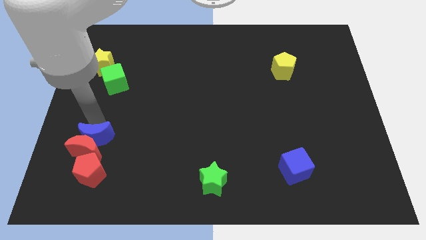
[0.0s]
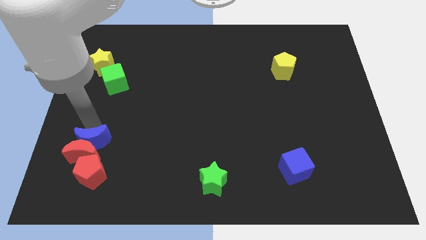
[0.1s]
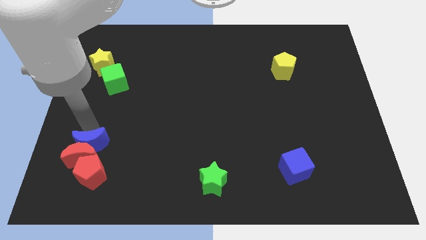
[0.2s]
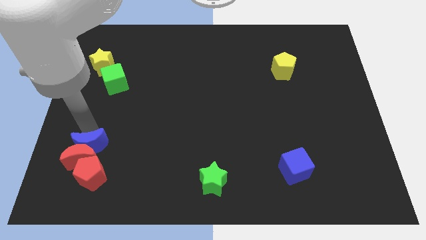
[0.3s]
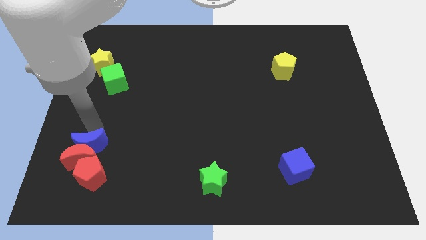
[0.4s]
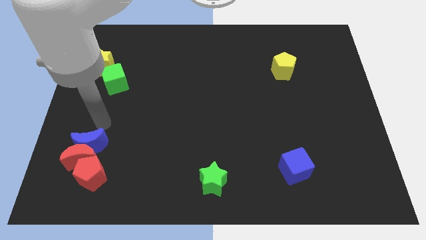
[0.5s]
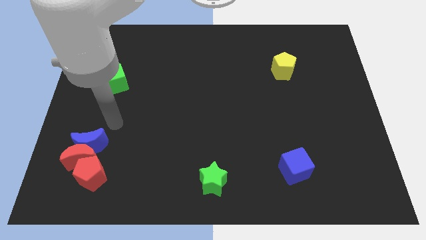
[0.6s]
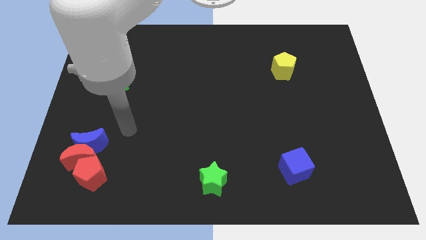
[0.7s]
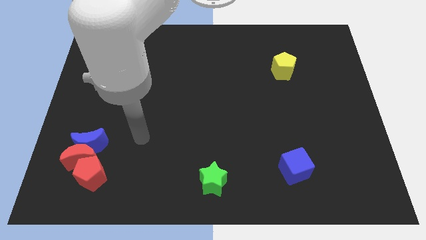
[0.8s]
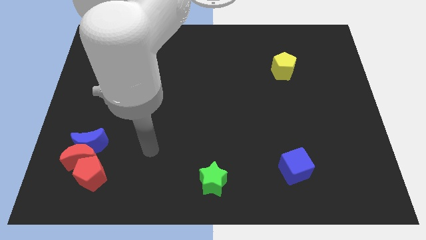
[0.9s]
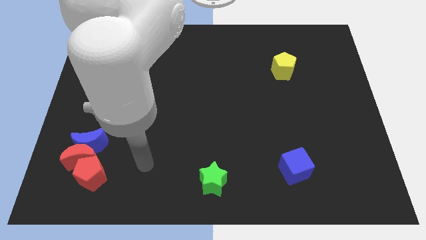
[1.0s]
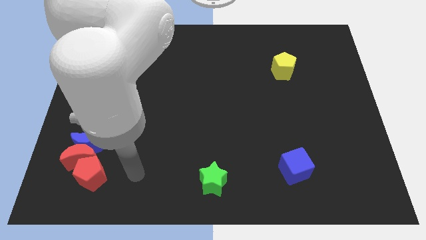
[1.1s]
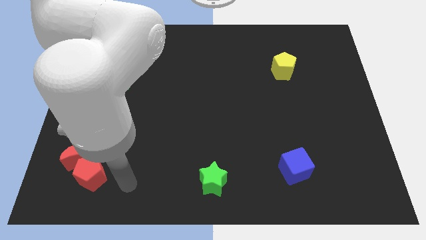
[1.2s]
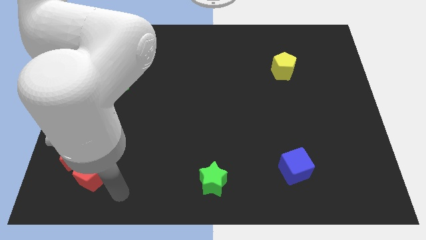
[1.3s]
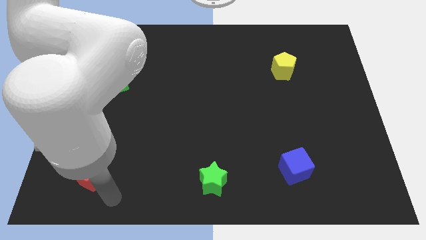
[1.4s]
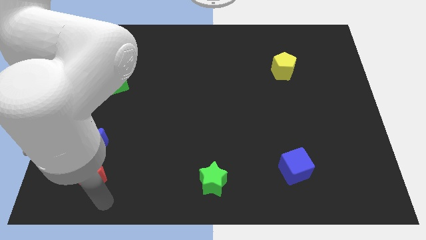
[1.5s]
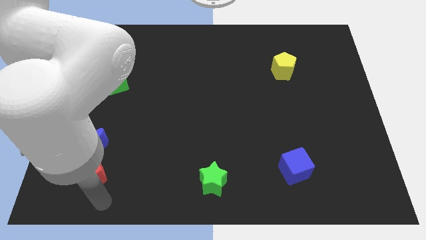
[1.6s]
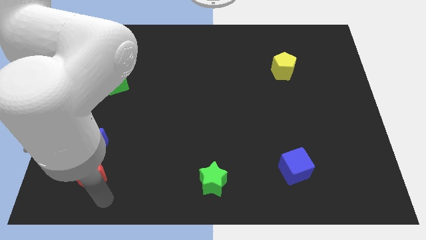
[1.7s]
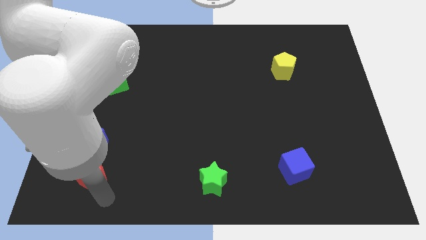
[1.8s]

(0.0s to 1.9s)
move the arm towards the bottom of the red pentagon

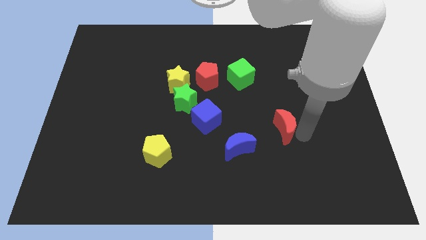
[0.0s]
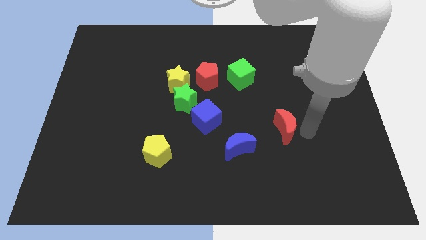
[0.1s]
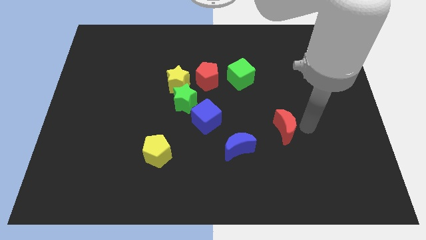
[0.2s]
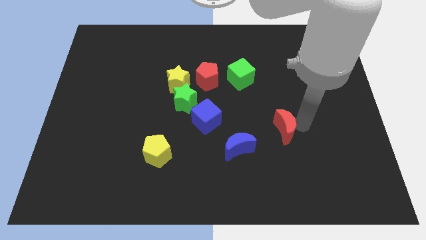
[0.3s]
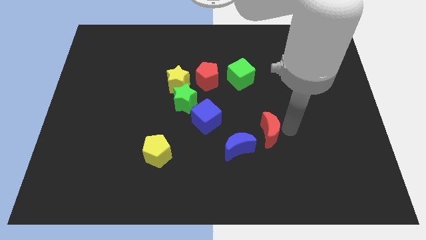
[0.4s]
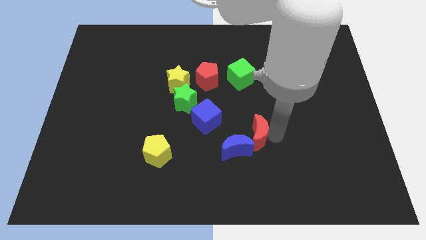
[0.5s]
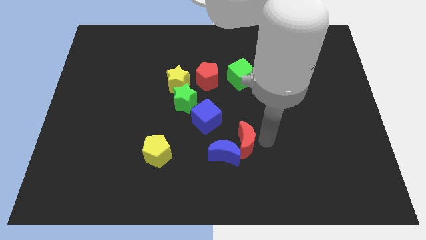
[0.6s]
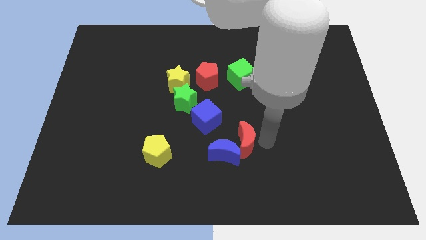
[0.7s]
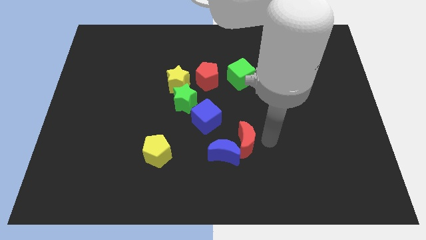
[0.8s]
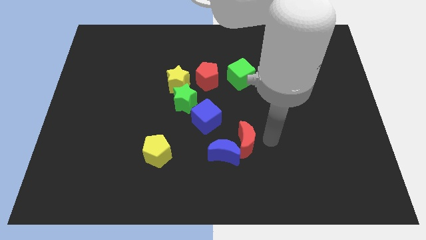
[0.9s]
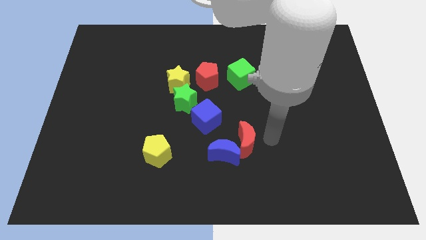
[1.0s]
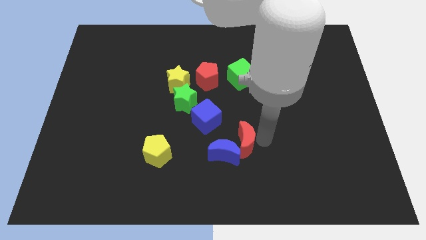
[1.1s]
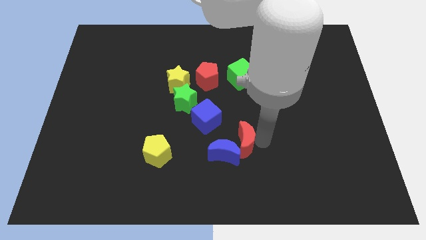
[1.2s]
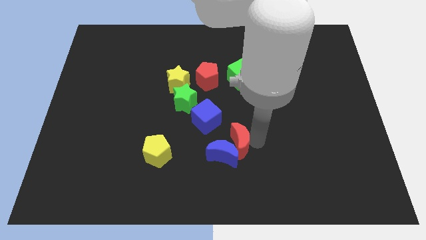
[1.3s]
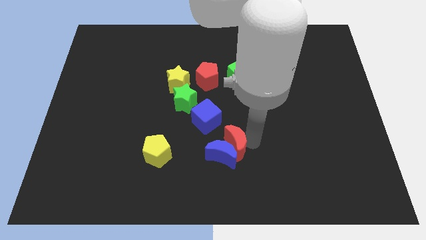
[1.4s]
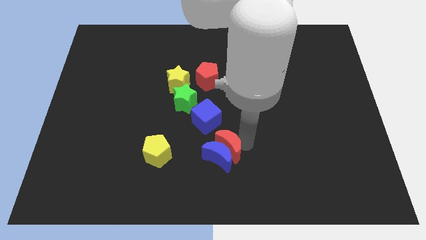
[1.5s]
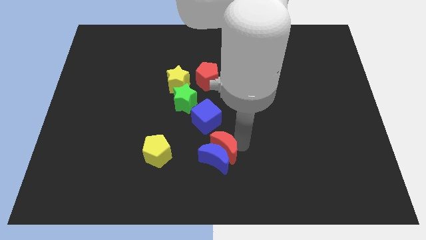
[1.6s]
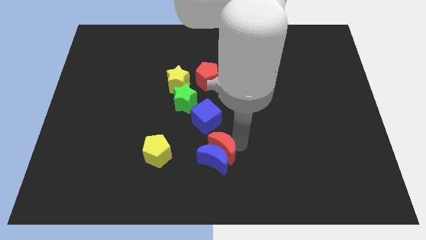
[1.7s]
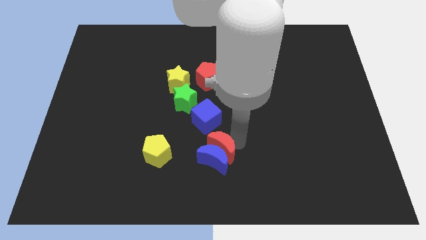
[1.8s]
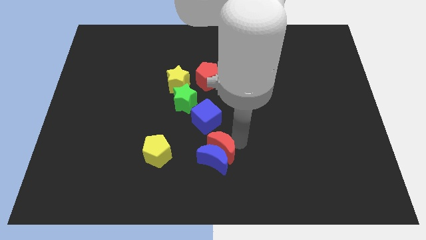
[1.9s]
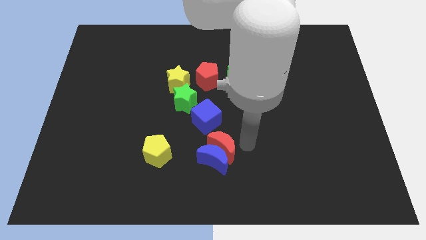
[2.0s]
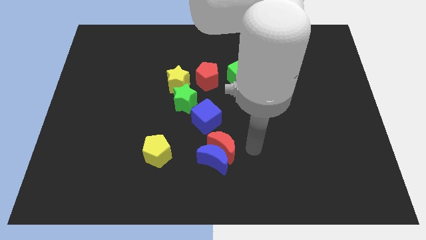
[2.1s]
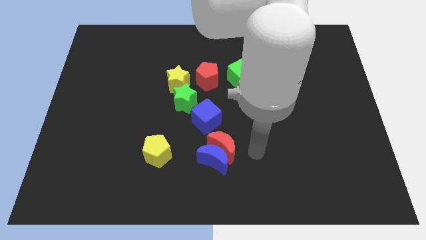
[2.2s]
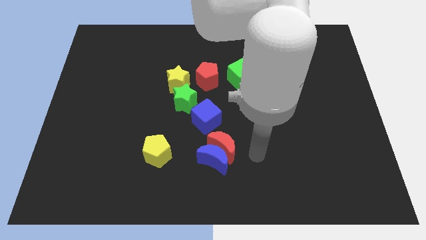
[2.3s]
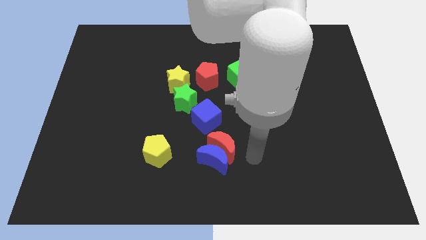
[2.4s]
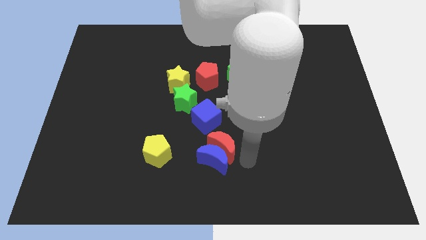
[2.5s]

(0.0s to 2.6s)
move the red moon into the blue moon

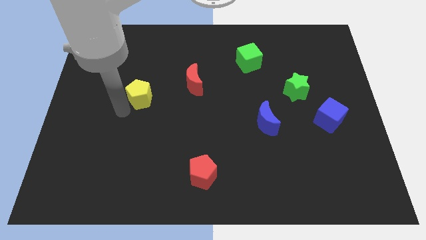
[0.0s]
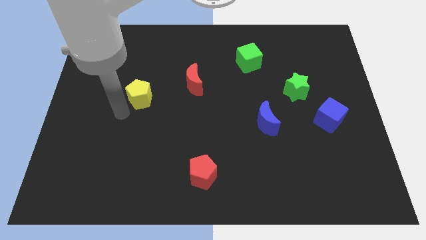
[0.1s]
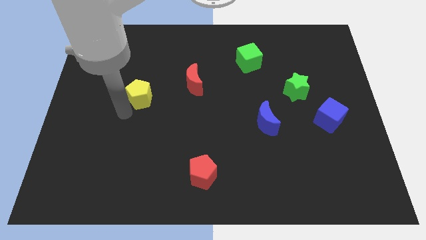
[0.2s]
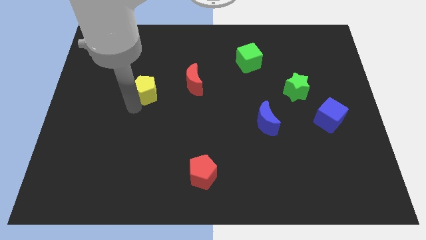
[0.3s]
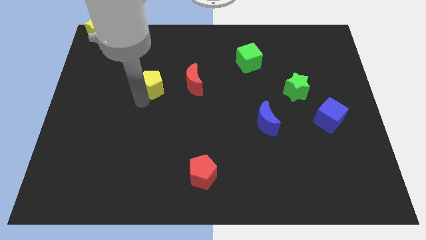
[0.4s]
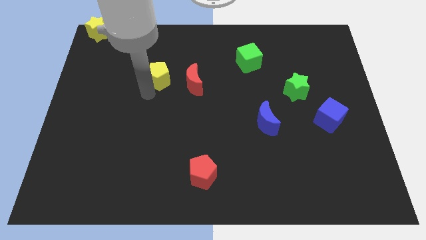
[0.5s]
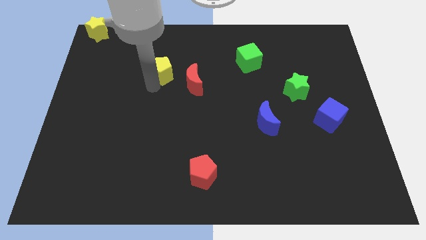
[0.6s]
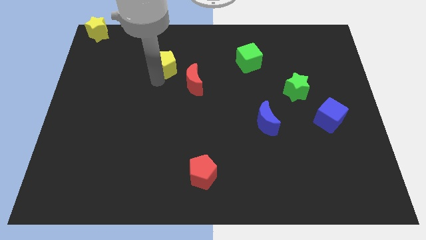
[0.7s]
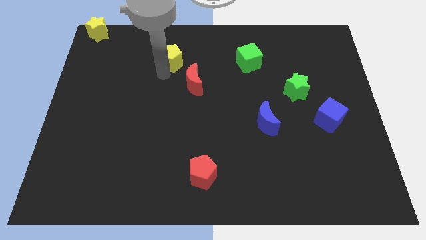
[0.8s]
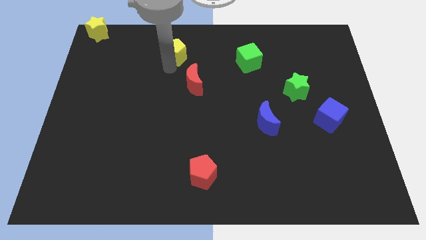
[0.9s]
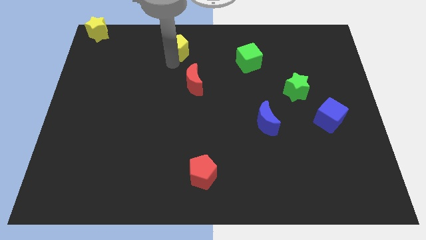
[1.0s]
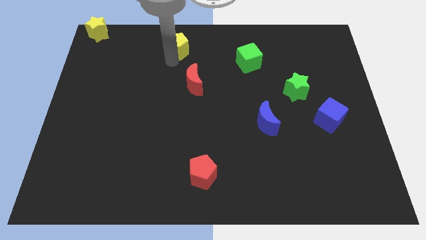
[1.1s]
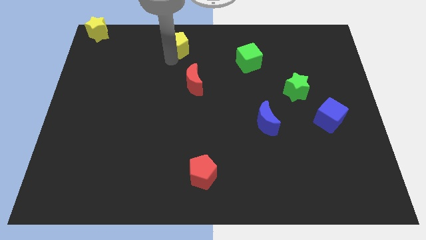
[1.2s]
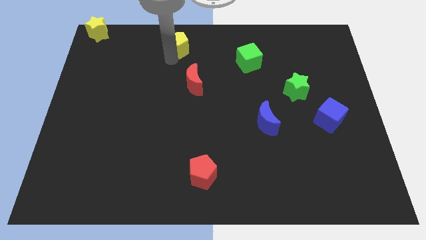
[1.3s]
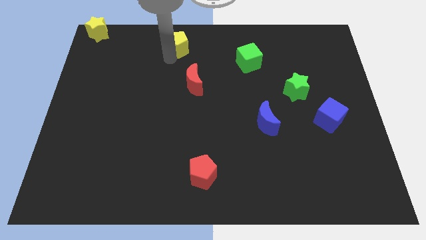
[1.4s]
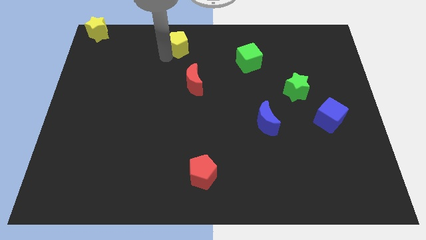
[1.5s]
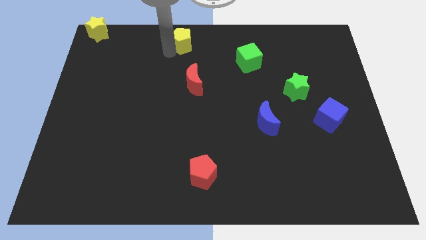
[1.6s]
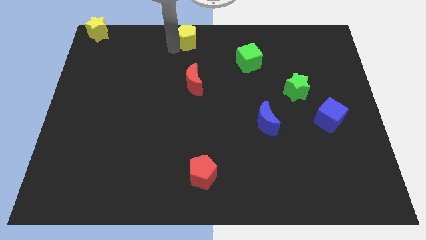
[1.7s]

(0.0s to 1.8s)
move yellow pentagon to the top of the board

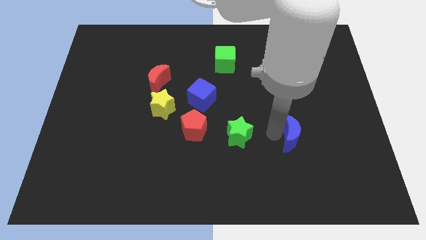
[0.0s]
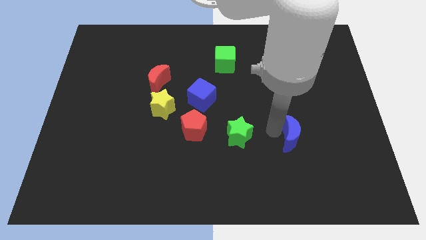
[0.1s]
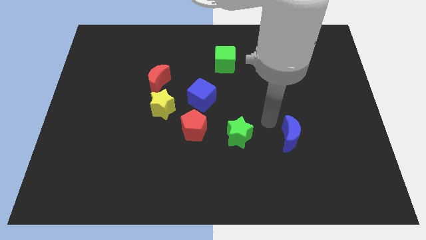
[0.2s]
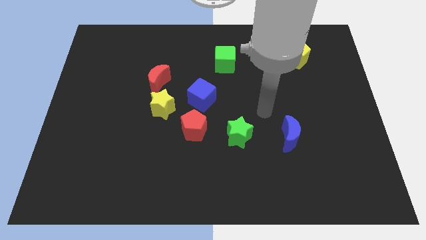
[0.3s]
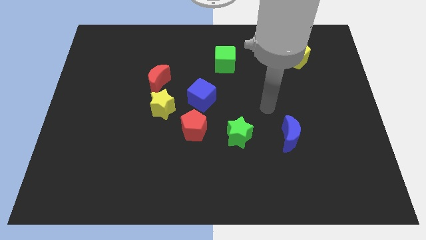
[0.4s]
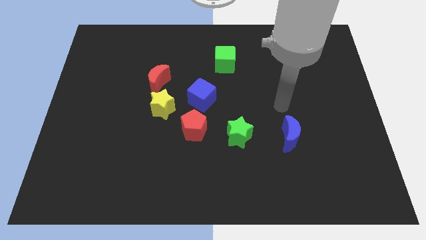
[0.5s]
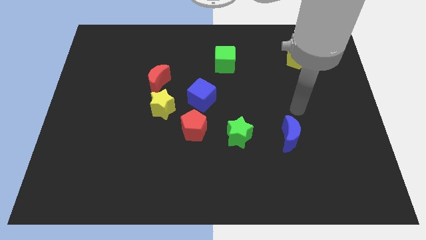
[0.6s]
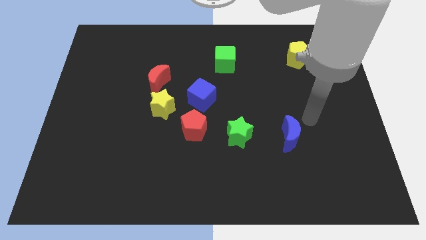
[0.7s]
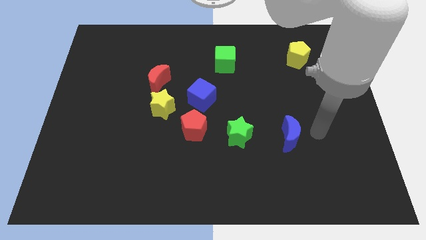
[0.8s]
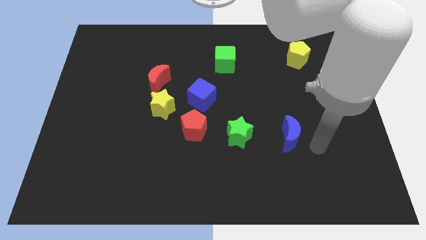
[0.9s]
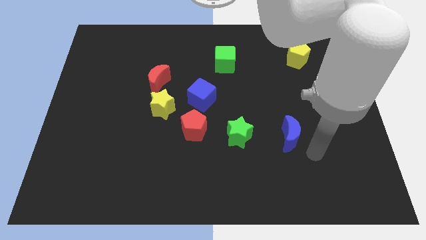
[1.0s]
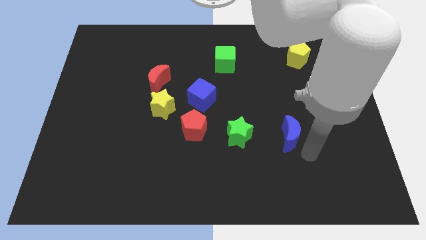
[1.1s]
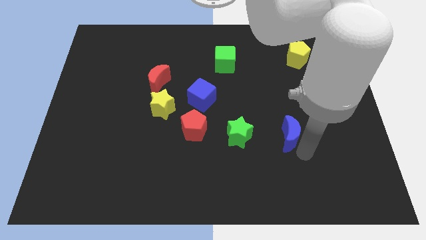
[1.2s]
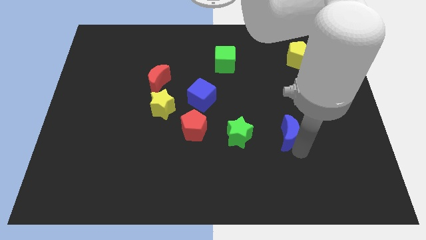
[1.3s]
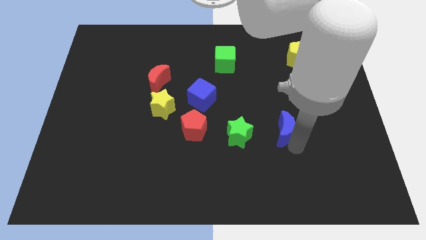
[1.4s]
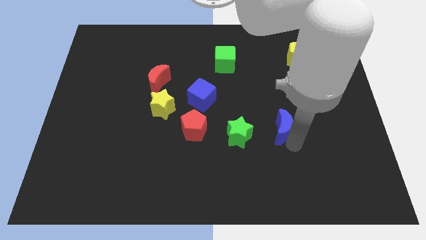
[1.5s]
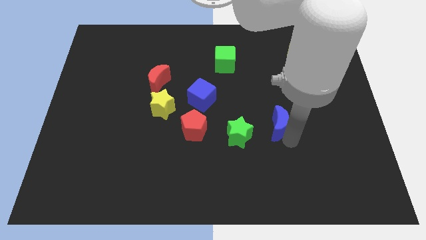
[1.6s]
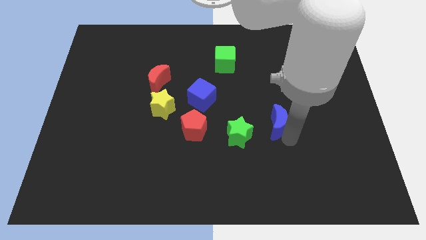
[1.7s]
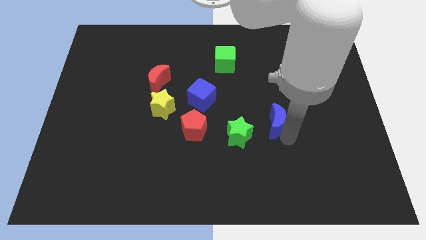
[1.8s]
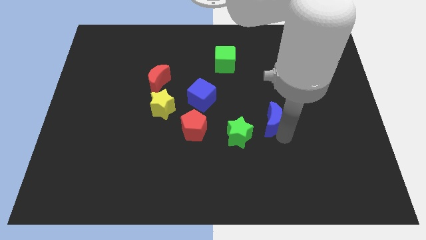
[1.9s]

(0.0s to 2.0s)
slide the blue crescent slightly towards the cube

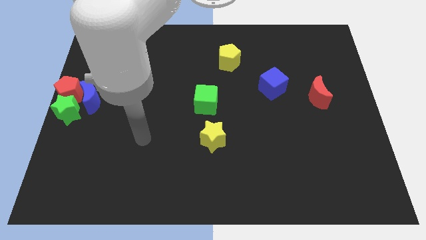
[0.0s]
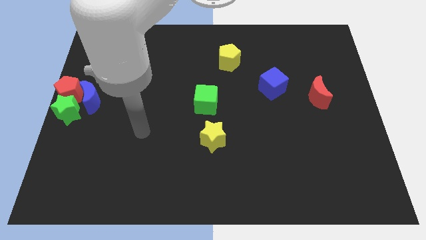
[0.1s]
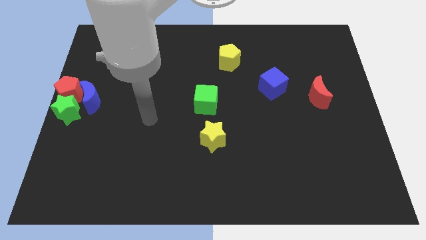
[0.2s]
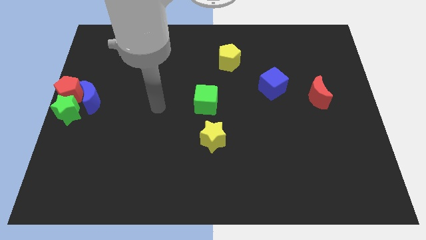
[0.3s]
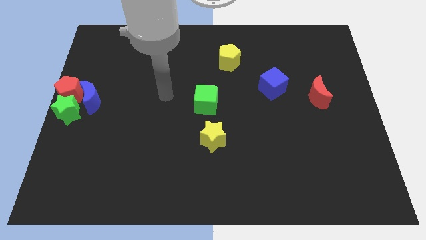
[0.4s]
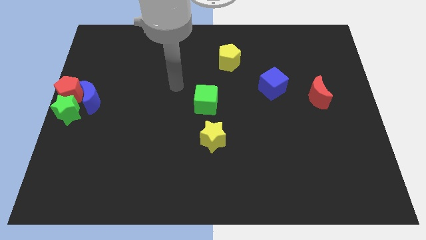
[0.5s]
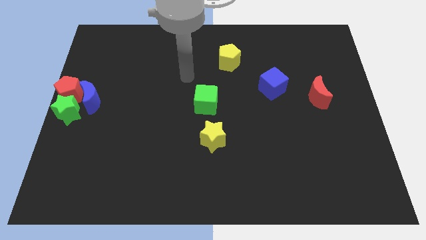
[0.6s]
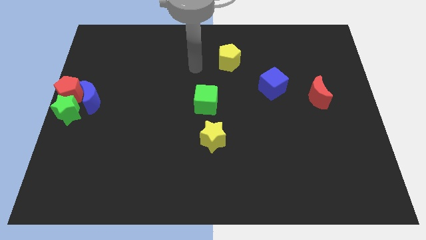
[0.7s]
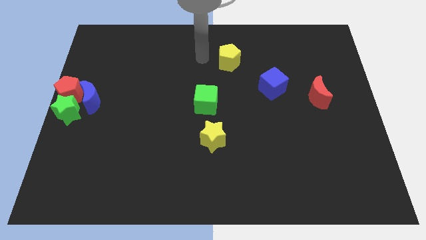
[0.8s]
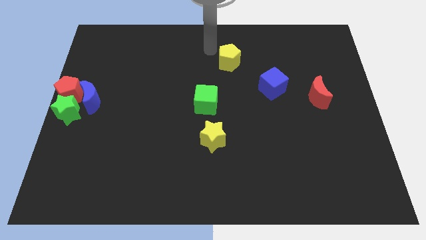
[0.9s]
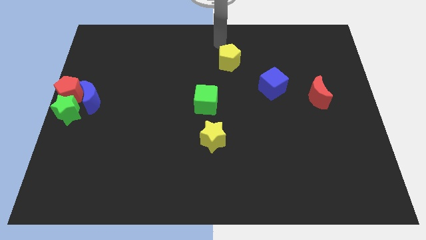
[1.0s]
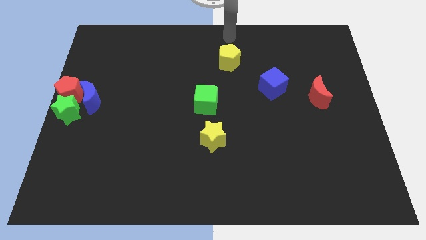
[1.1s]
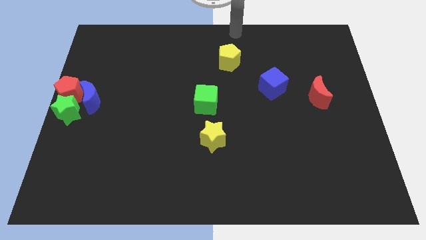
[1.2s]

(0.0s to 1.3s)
place your arm above the yellow pentagon
